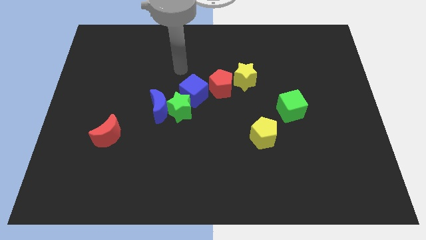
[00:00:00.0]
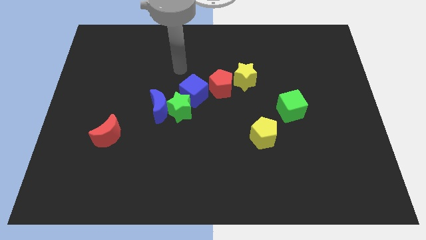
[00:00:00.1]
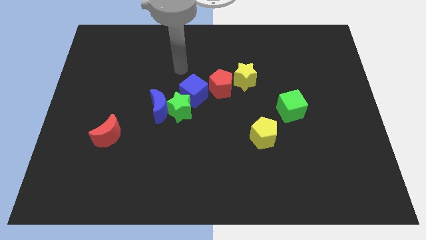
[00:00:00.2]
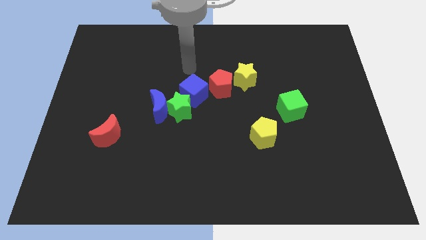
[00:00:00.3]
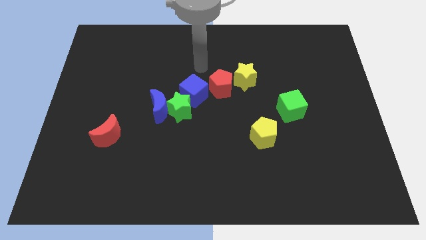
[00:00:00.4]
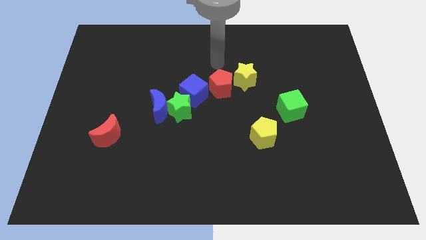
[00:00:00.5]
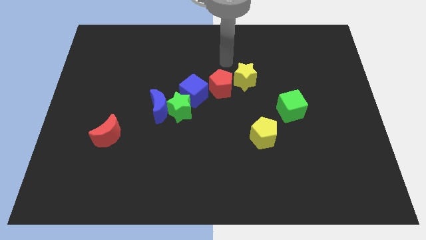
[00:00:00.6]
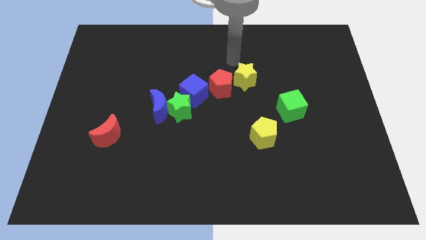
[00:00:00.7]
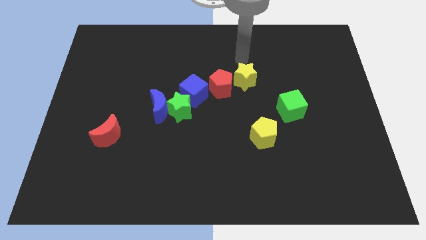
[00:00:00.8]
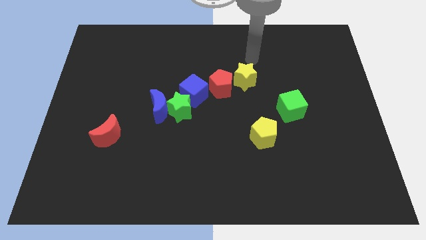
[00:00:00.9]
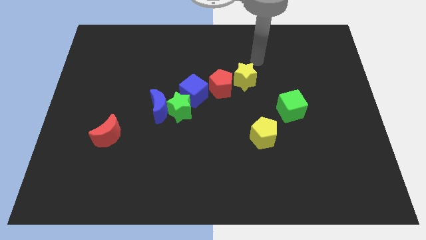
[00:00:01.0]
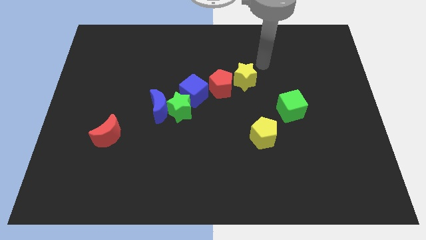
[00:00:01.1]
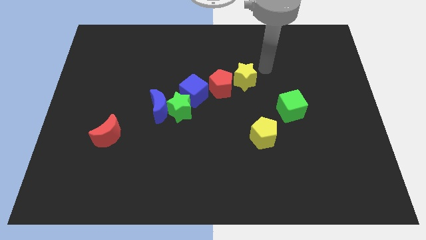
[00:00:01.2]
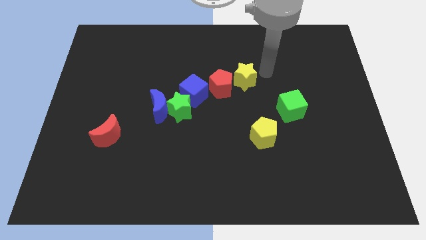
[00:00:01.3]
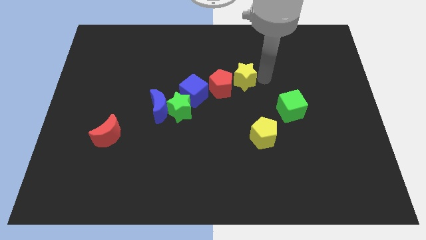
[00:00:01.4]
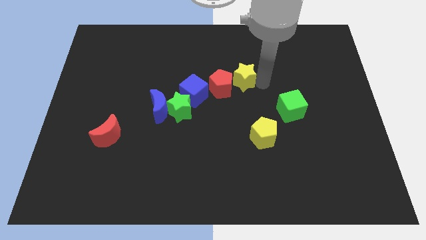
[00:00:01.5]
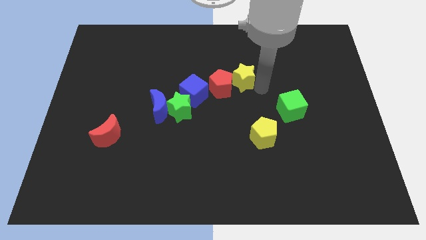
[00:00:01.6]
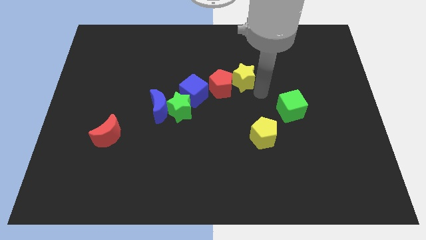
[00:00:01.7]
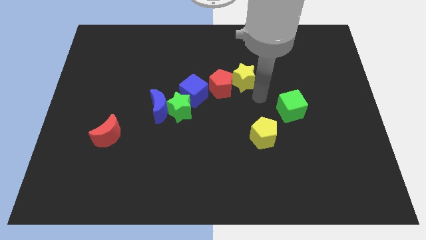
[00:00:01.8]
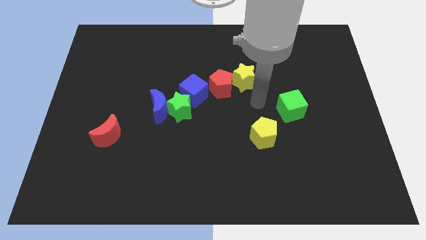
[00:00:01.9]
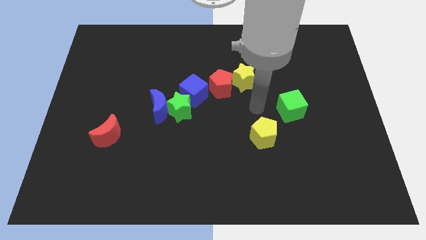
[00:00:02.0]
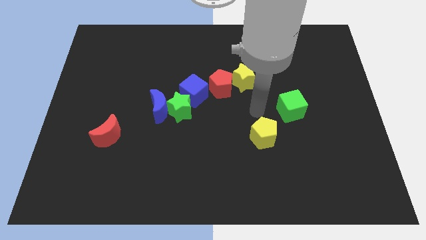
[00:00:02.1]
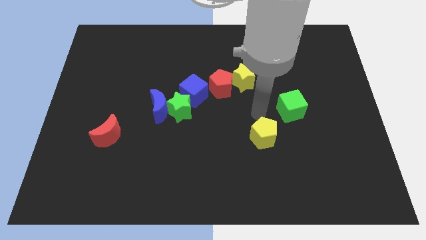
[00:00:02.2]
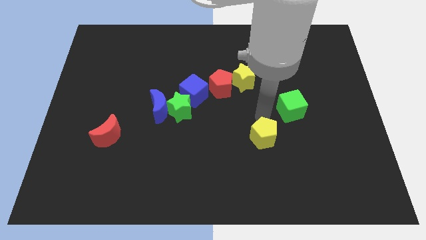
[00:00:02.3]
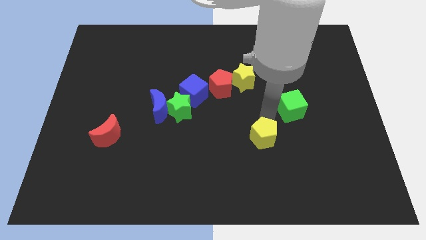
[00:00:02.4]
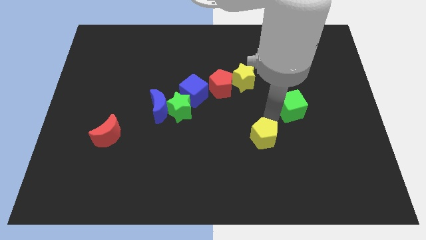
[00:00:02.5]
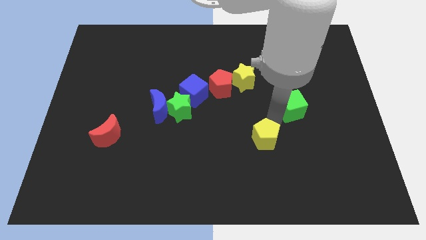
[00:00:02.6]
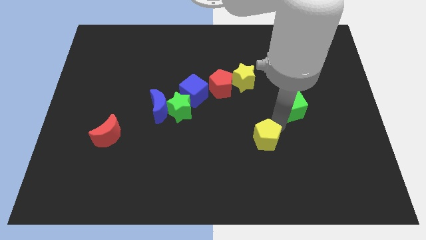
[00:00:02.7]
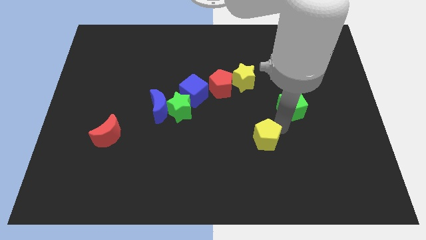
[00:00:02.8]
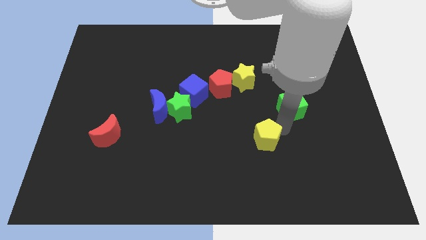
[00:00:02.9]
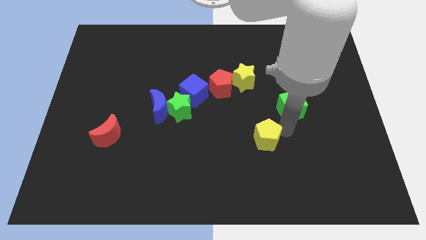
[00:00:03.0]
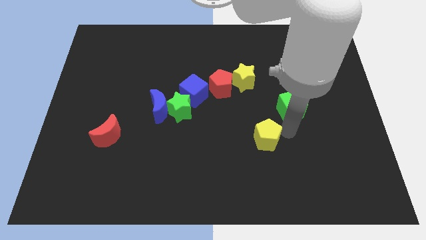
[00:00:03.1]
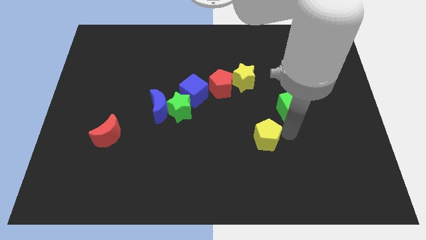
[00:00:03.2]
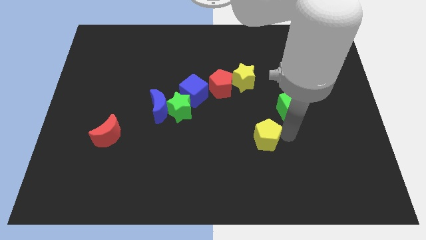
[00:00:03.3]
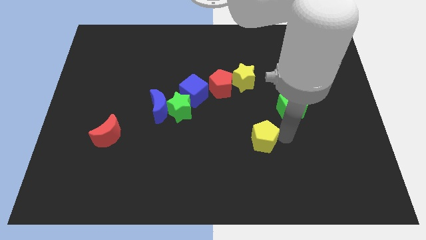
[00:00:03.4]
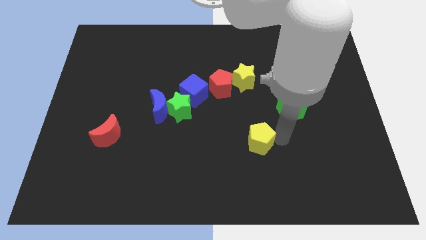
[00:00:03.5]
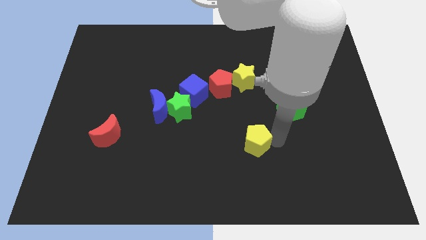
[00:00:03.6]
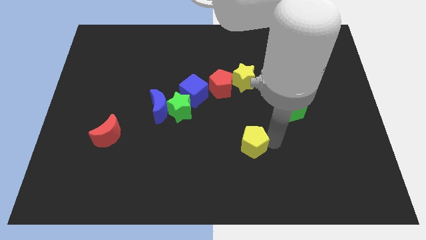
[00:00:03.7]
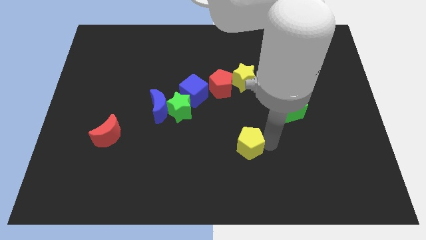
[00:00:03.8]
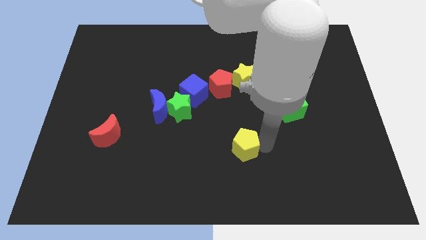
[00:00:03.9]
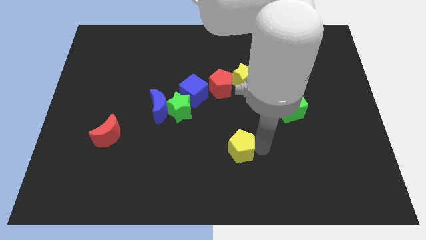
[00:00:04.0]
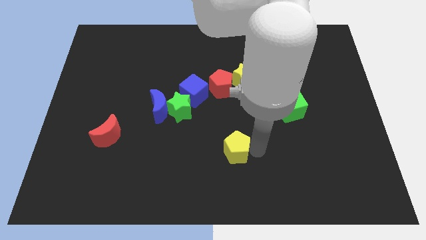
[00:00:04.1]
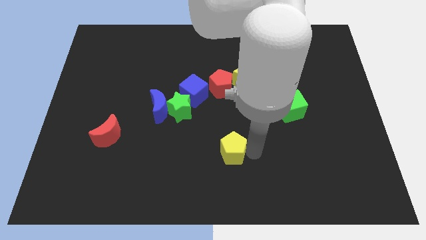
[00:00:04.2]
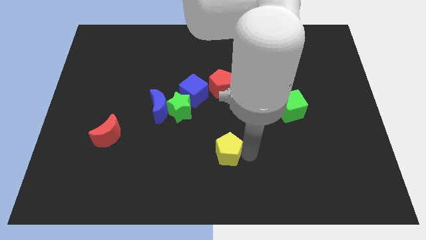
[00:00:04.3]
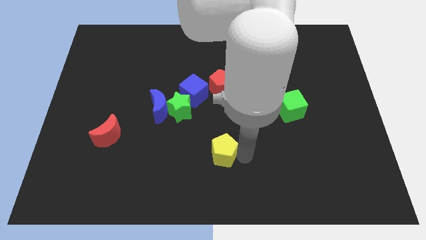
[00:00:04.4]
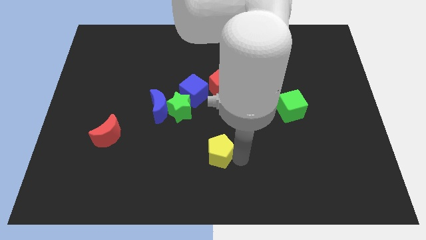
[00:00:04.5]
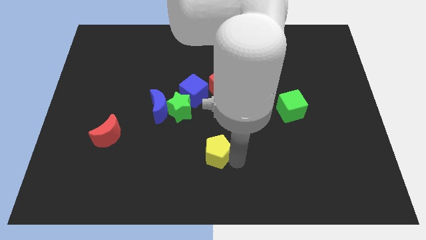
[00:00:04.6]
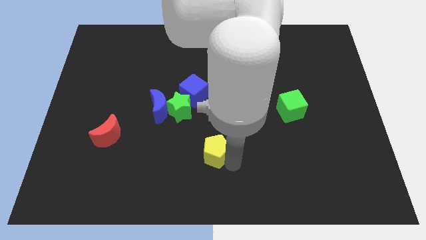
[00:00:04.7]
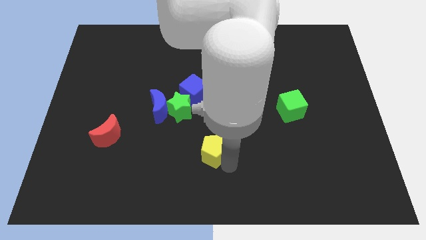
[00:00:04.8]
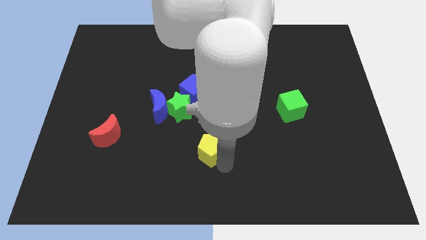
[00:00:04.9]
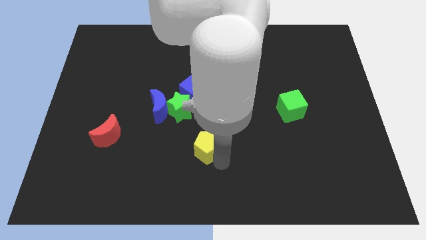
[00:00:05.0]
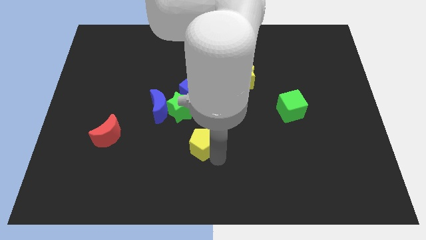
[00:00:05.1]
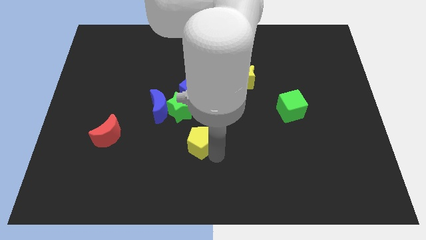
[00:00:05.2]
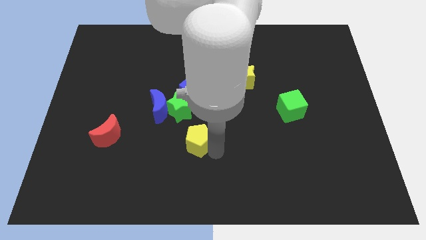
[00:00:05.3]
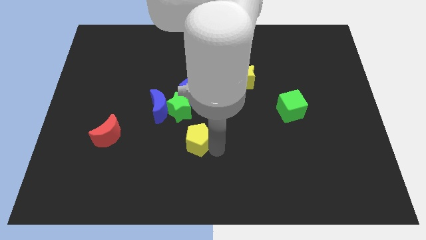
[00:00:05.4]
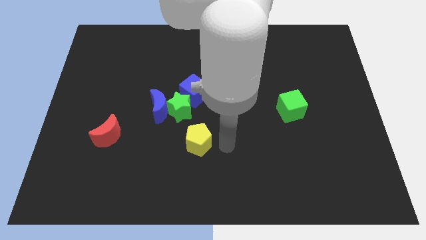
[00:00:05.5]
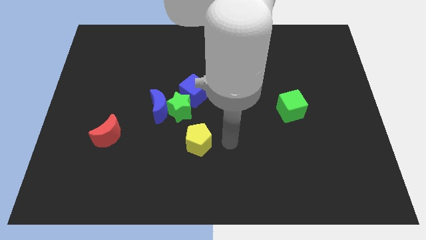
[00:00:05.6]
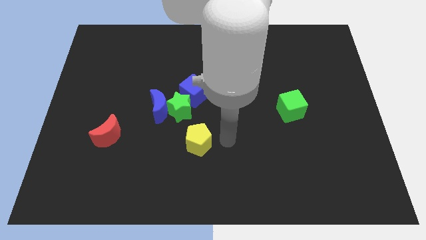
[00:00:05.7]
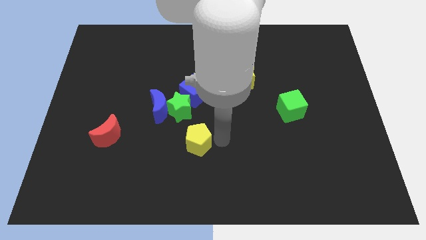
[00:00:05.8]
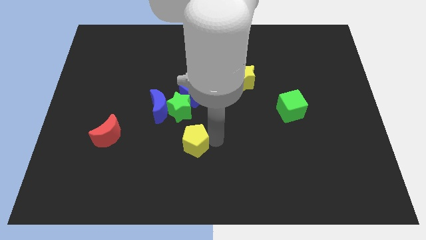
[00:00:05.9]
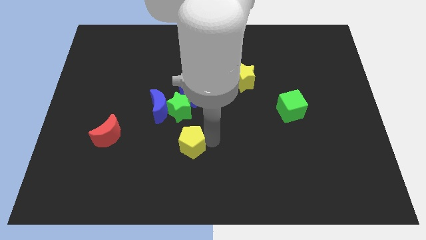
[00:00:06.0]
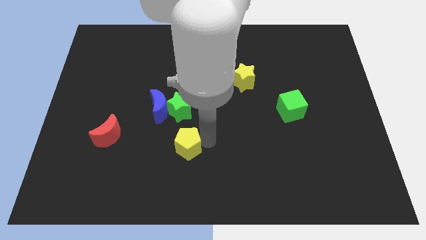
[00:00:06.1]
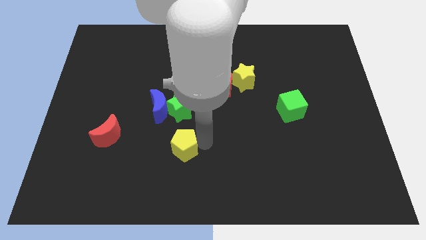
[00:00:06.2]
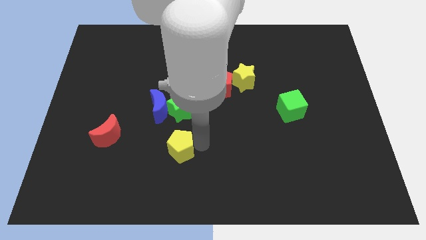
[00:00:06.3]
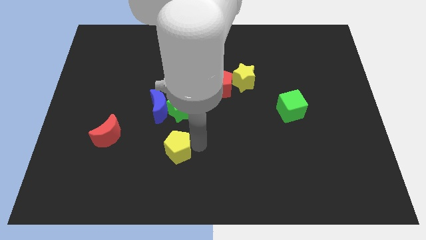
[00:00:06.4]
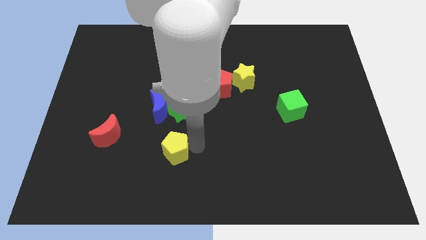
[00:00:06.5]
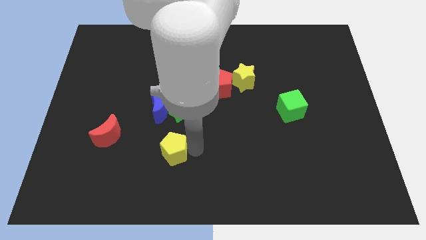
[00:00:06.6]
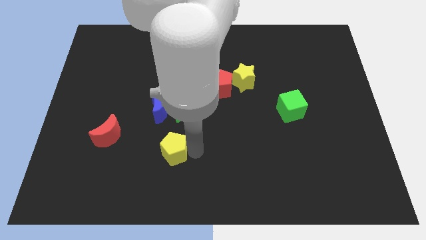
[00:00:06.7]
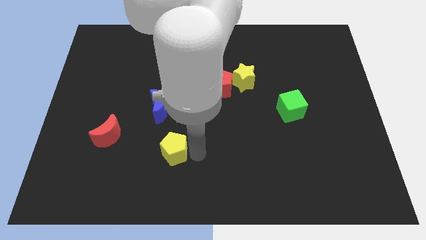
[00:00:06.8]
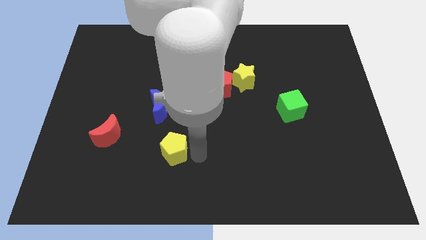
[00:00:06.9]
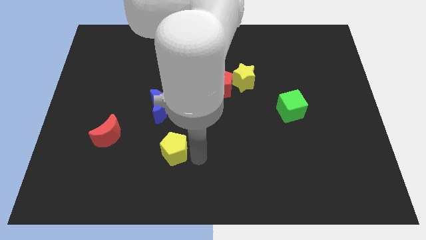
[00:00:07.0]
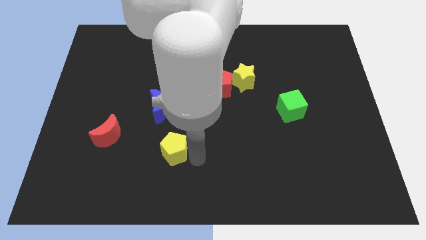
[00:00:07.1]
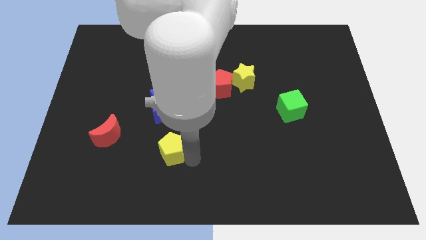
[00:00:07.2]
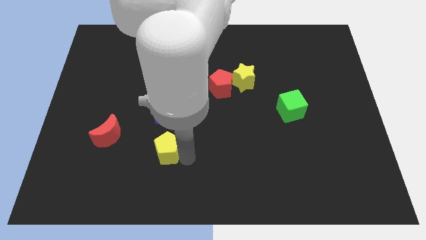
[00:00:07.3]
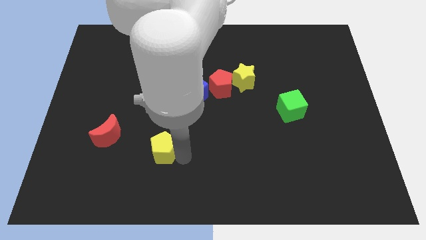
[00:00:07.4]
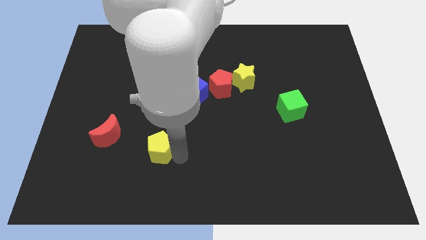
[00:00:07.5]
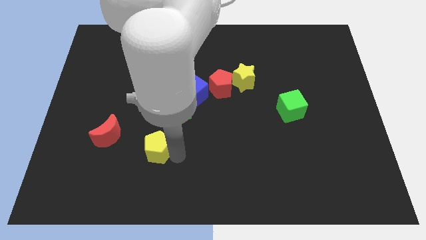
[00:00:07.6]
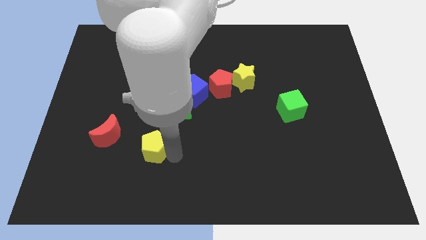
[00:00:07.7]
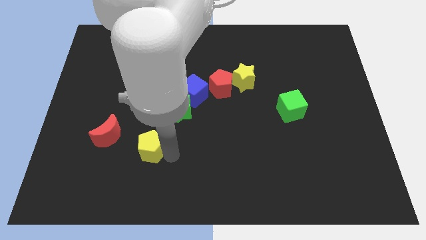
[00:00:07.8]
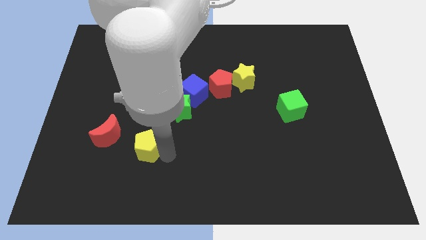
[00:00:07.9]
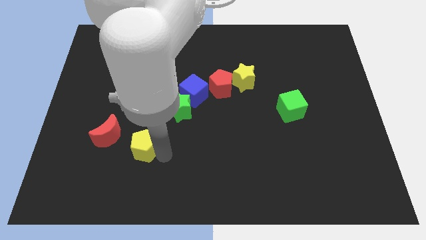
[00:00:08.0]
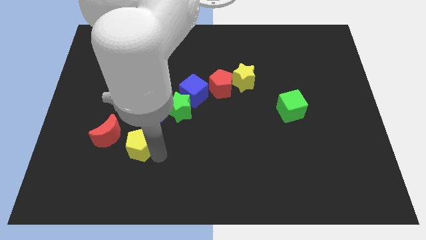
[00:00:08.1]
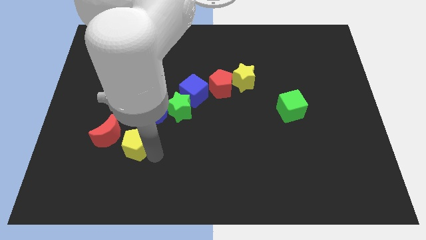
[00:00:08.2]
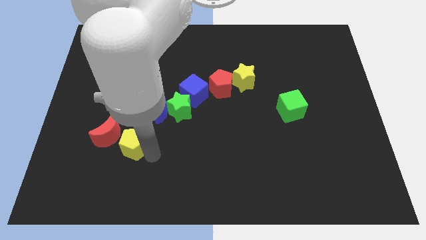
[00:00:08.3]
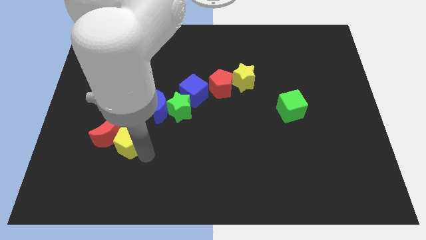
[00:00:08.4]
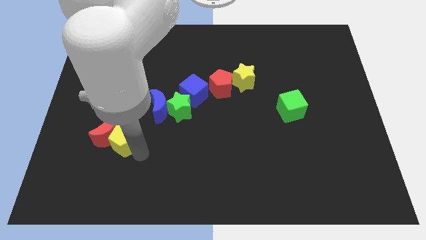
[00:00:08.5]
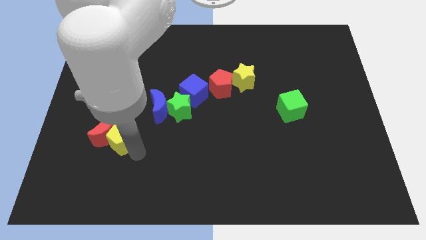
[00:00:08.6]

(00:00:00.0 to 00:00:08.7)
move the yellow pentagon to the red moon
